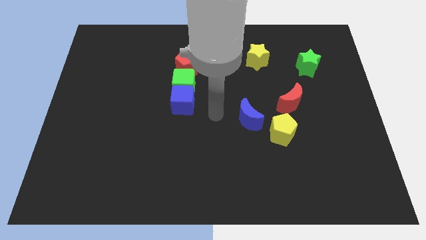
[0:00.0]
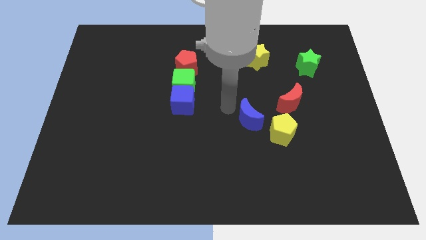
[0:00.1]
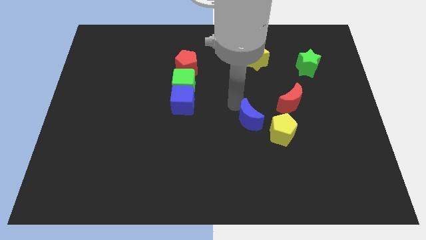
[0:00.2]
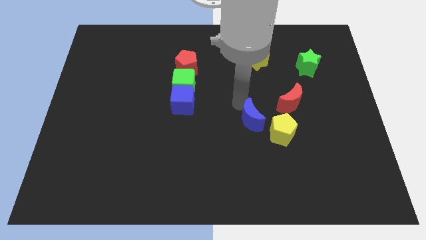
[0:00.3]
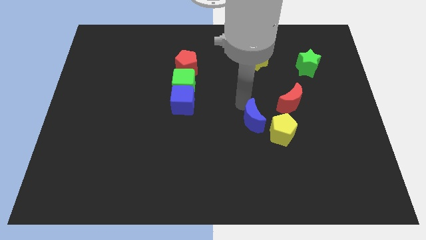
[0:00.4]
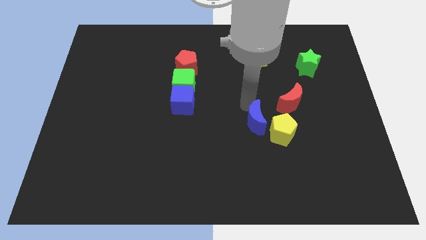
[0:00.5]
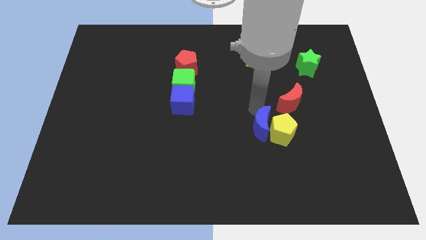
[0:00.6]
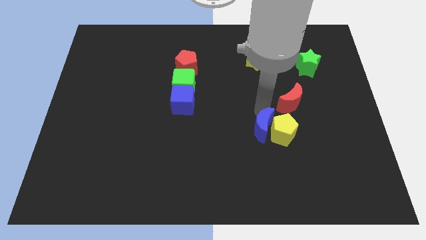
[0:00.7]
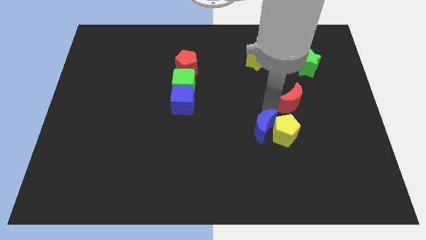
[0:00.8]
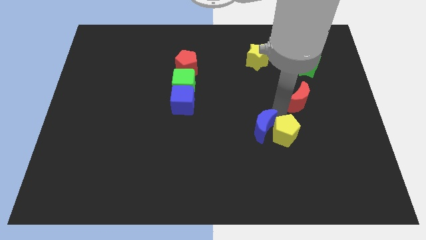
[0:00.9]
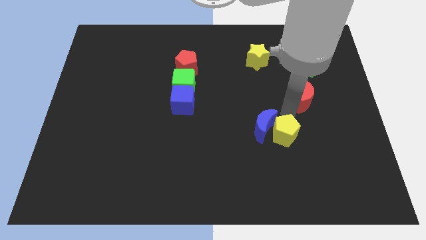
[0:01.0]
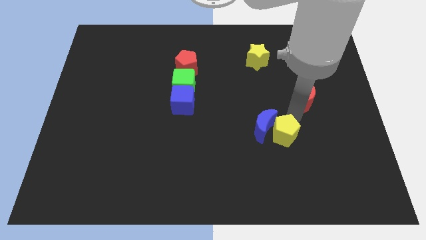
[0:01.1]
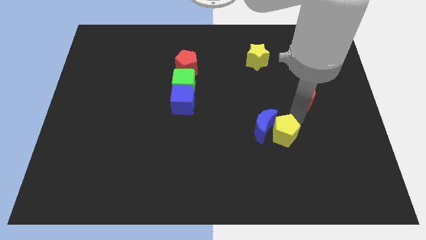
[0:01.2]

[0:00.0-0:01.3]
place the blue moon to the left of the yellow pentagon

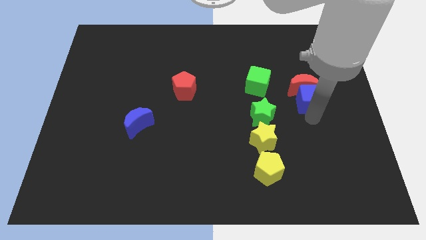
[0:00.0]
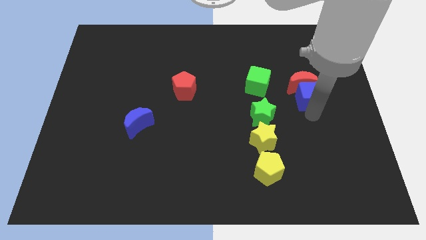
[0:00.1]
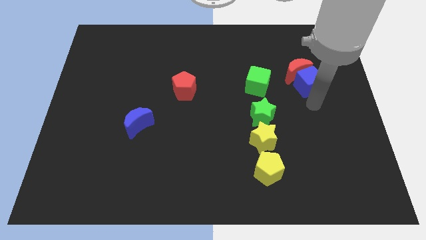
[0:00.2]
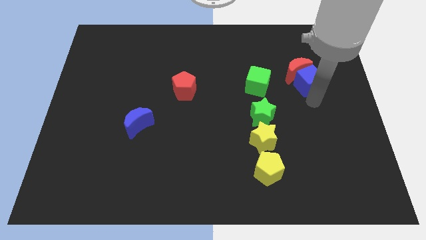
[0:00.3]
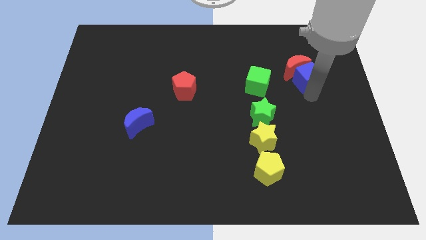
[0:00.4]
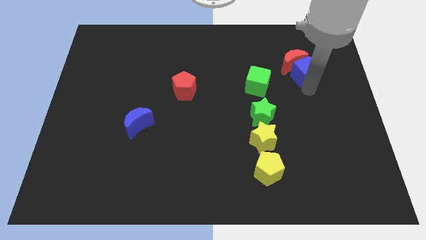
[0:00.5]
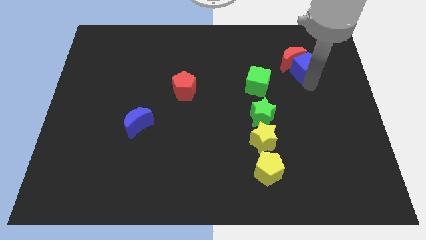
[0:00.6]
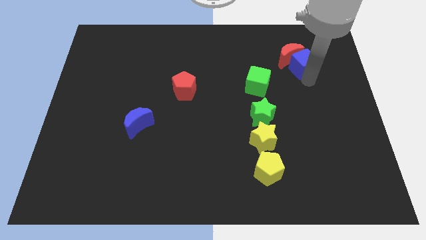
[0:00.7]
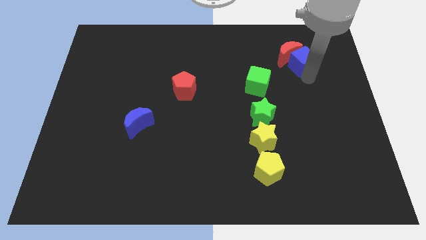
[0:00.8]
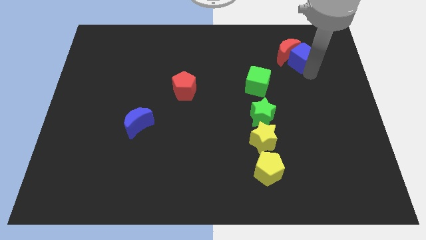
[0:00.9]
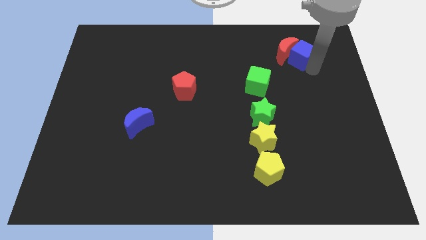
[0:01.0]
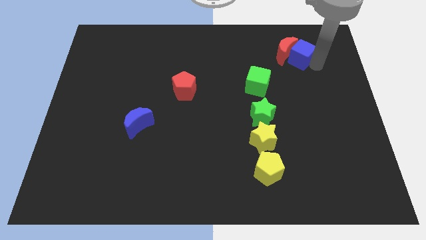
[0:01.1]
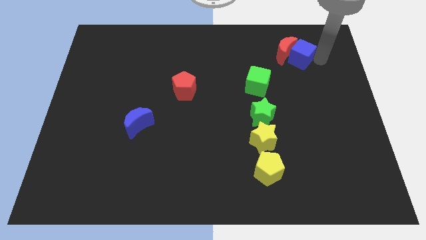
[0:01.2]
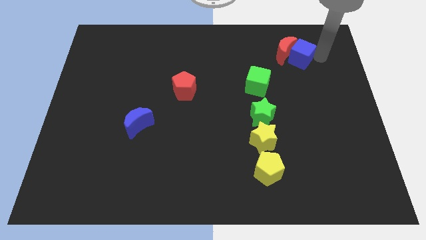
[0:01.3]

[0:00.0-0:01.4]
push the blue cube and red moon towards top side

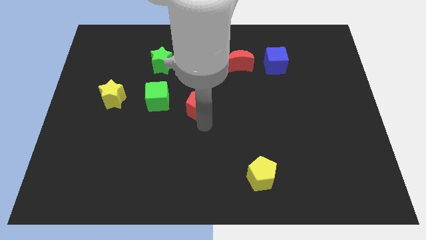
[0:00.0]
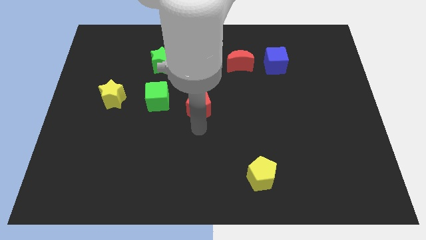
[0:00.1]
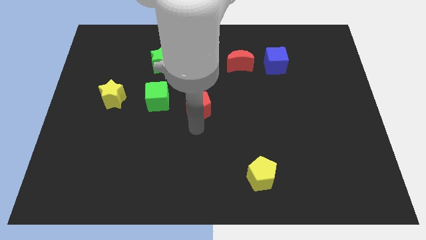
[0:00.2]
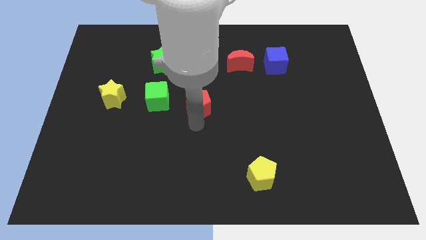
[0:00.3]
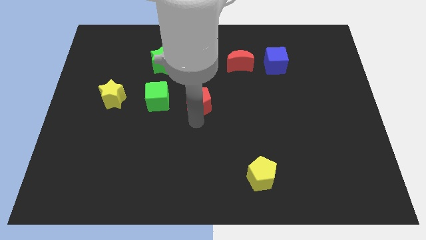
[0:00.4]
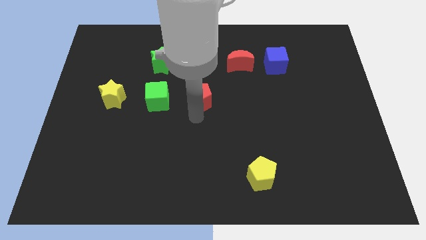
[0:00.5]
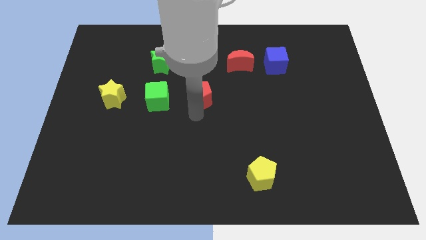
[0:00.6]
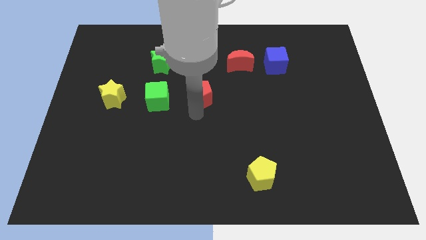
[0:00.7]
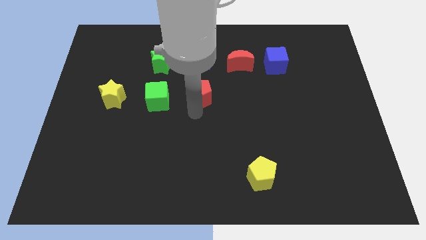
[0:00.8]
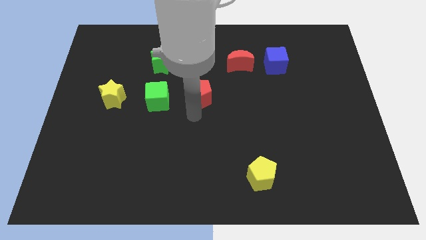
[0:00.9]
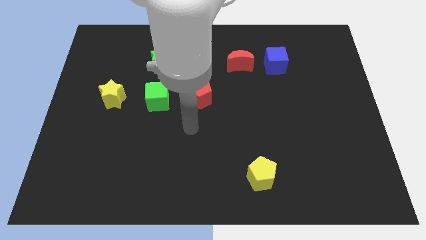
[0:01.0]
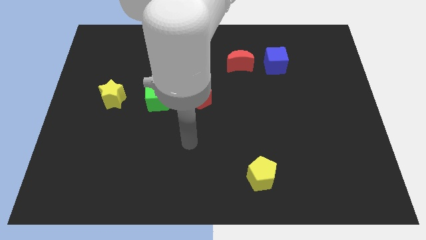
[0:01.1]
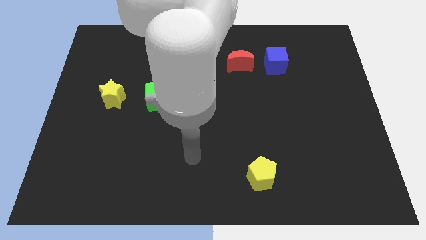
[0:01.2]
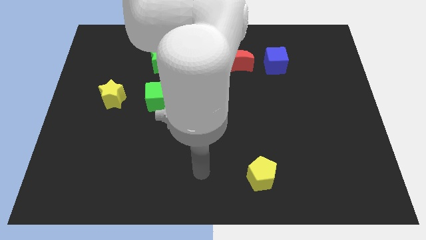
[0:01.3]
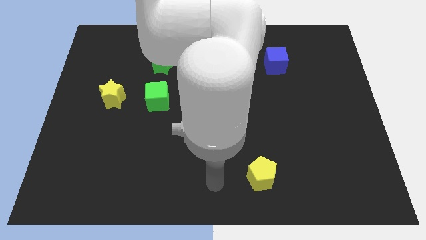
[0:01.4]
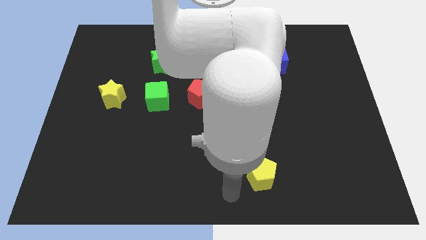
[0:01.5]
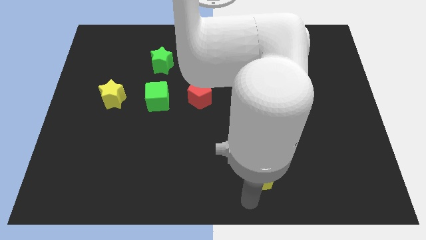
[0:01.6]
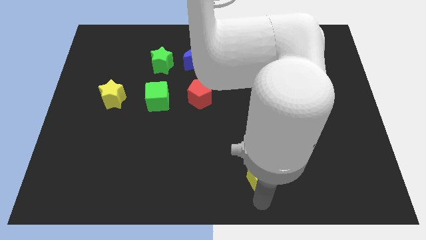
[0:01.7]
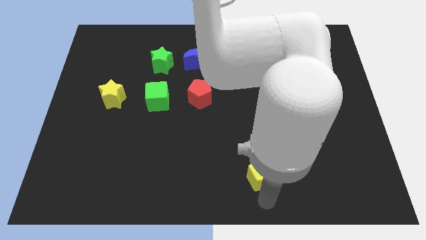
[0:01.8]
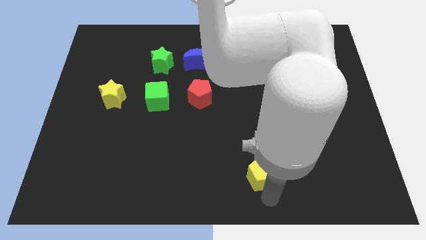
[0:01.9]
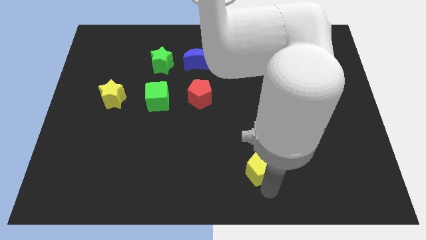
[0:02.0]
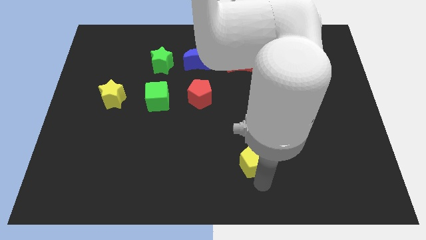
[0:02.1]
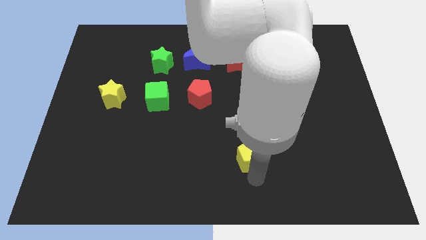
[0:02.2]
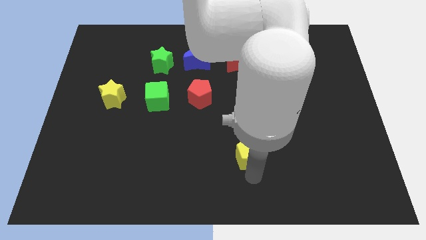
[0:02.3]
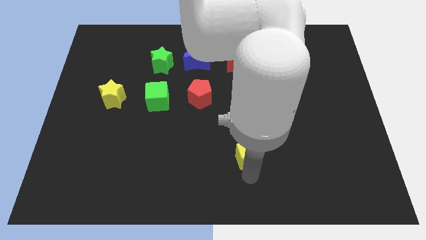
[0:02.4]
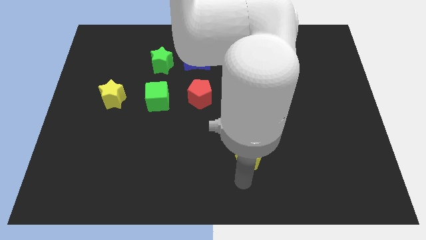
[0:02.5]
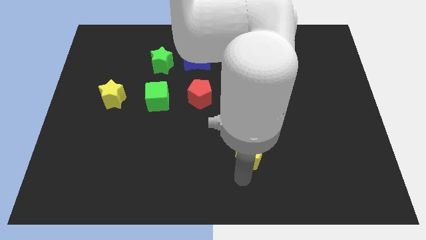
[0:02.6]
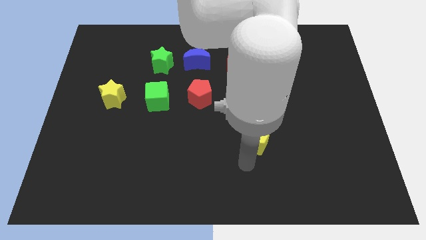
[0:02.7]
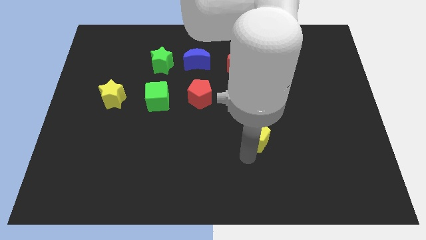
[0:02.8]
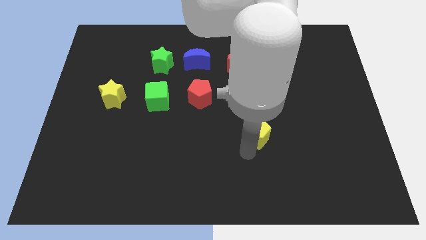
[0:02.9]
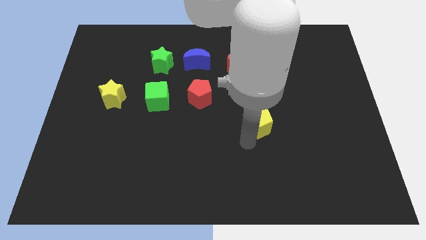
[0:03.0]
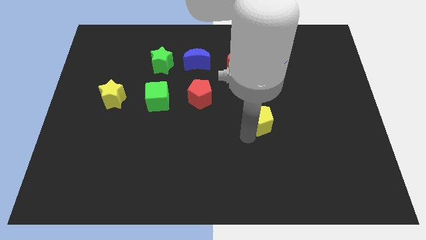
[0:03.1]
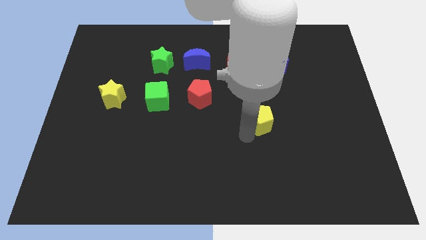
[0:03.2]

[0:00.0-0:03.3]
push the yellow pentagon upwards

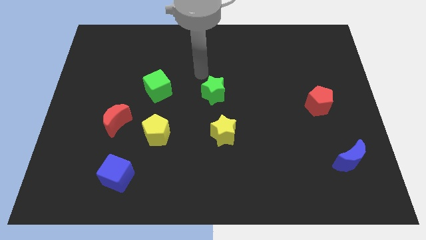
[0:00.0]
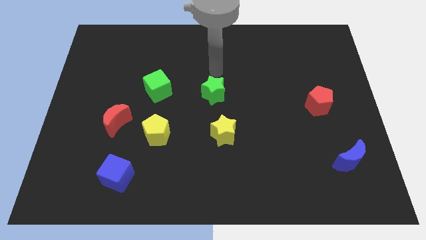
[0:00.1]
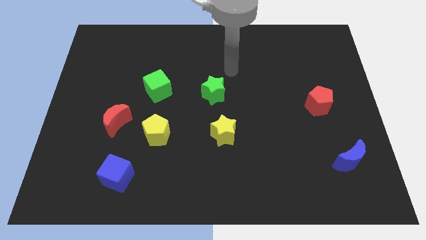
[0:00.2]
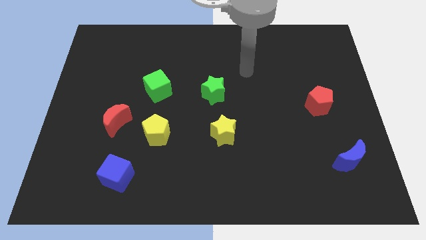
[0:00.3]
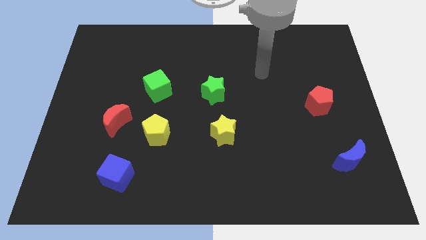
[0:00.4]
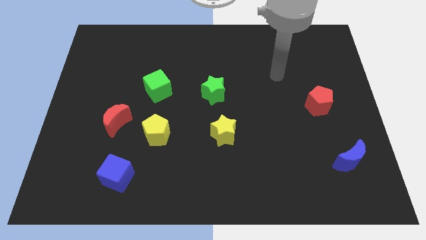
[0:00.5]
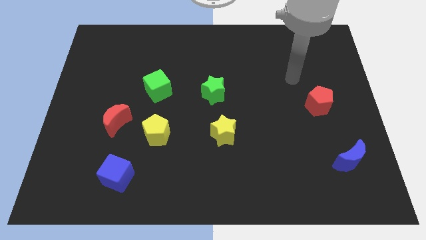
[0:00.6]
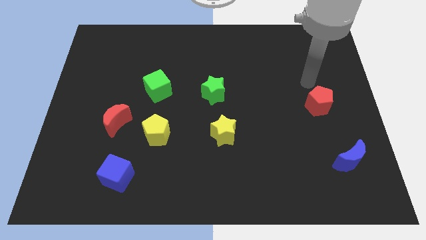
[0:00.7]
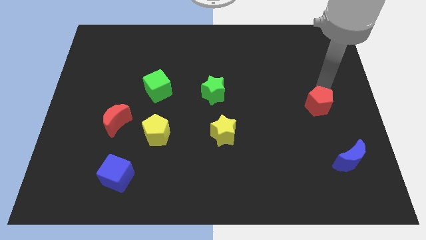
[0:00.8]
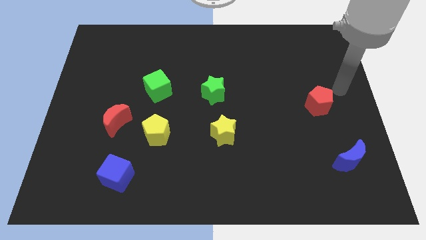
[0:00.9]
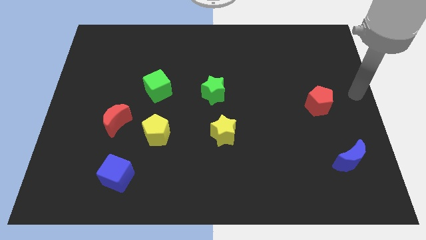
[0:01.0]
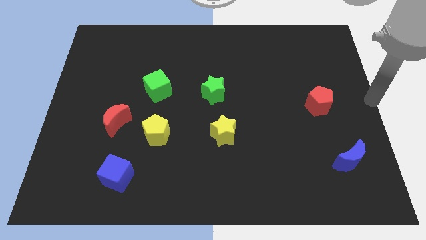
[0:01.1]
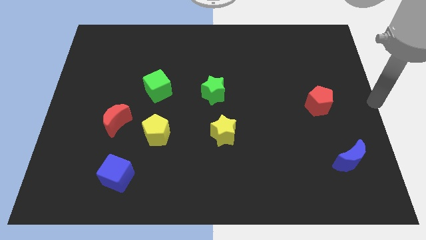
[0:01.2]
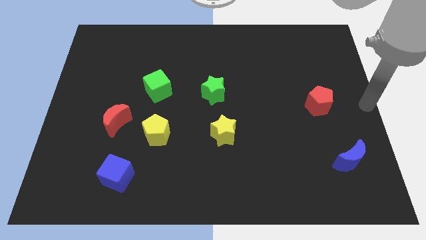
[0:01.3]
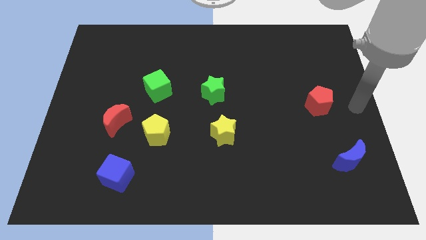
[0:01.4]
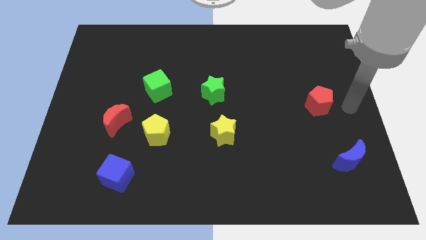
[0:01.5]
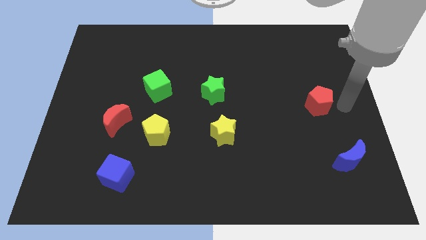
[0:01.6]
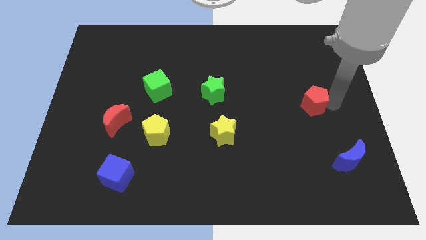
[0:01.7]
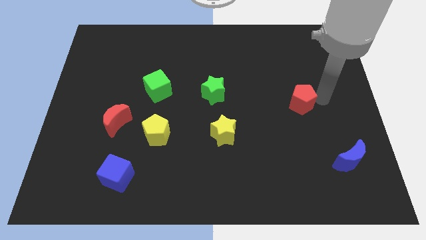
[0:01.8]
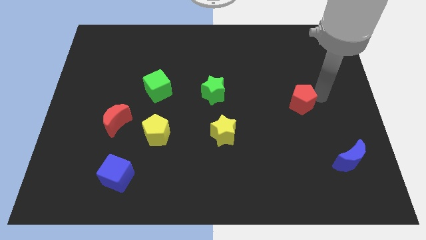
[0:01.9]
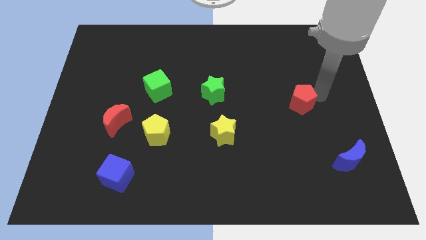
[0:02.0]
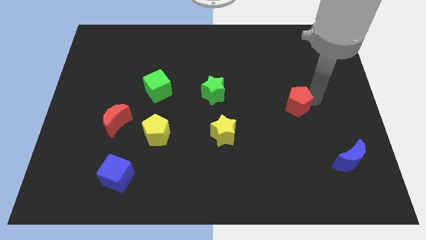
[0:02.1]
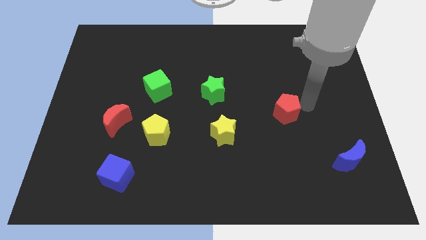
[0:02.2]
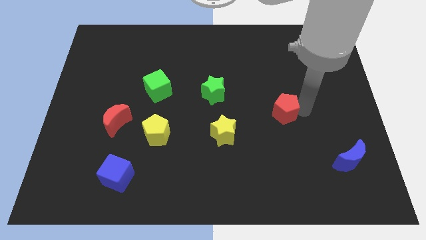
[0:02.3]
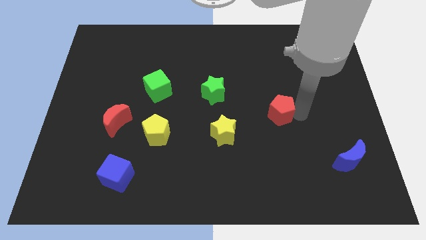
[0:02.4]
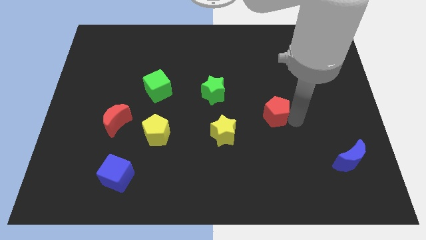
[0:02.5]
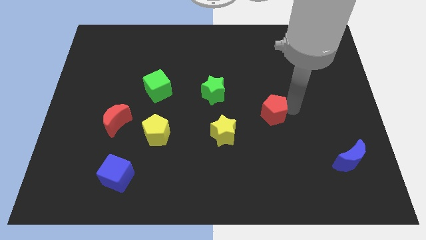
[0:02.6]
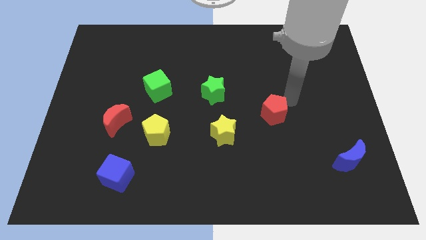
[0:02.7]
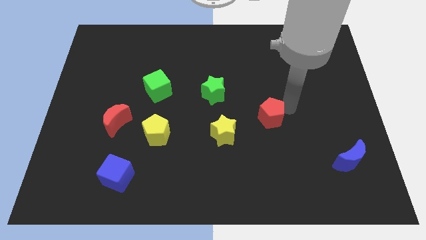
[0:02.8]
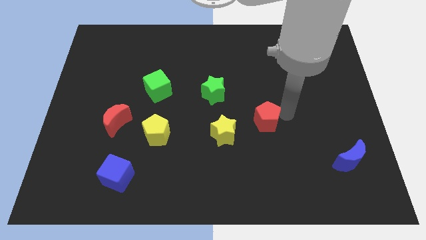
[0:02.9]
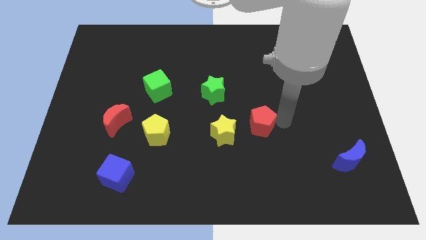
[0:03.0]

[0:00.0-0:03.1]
place the red pentagon to the right side of the yellow star
